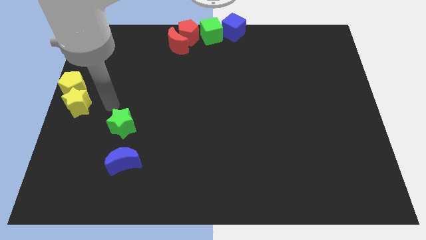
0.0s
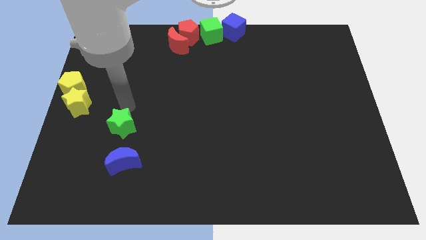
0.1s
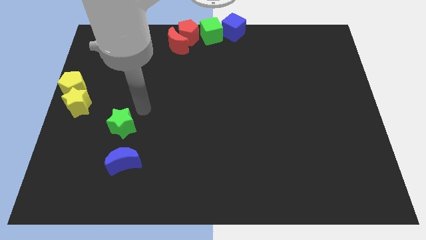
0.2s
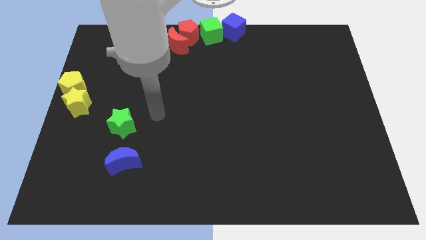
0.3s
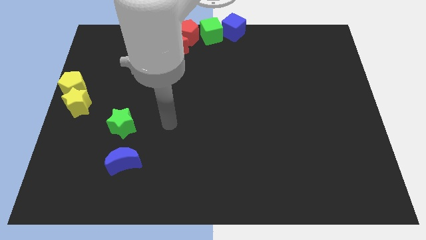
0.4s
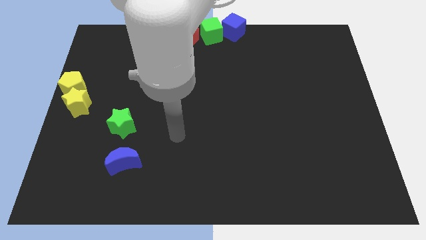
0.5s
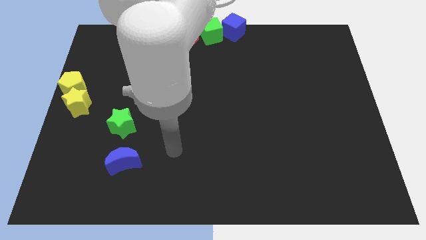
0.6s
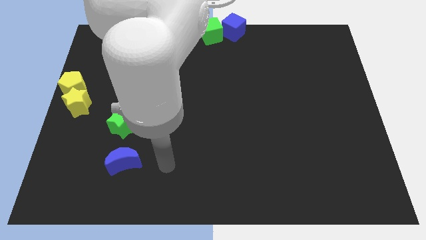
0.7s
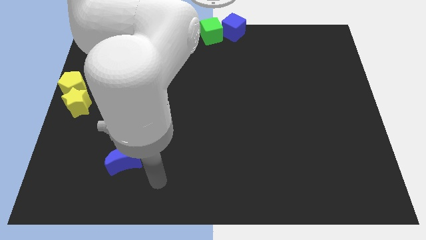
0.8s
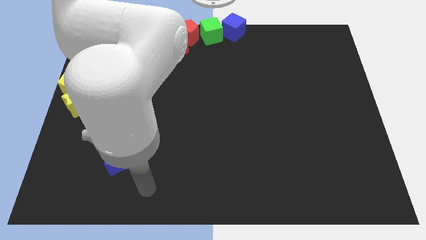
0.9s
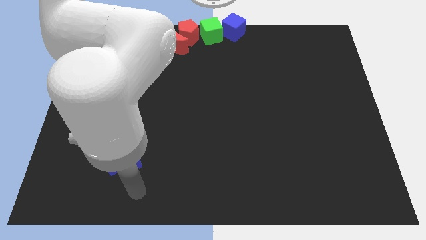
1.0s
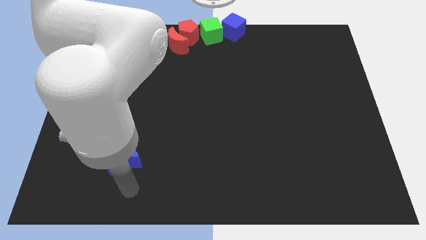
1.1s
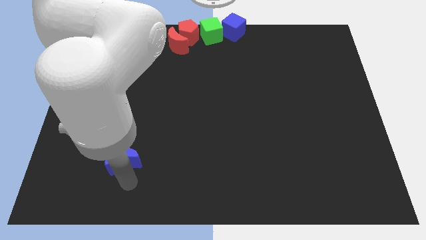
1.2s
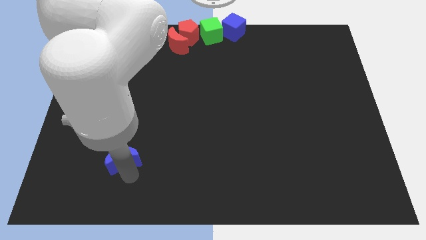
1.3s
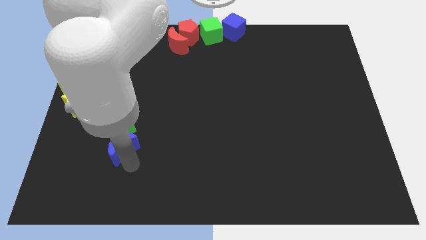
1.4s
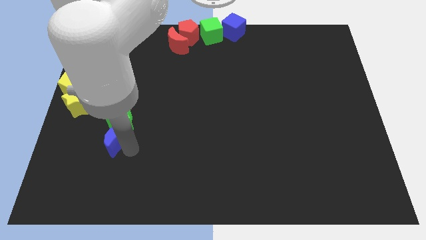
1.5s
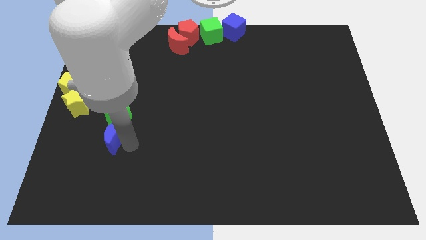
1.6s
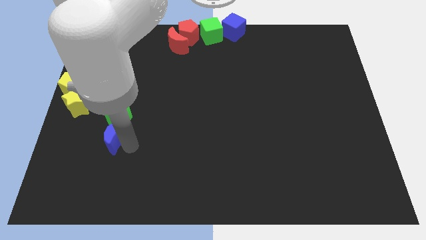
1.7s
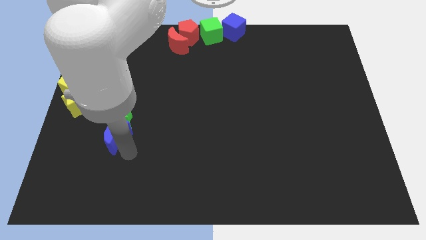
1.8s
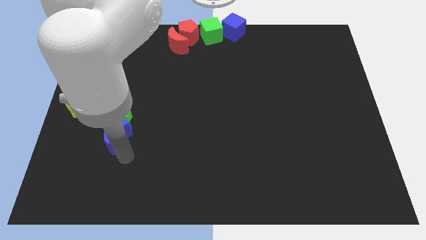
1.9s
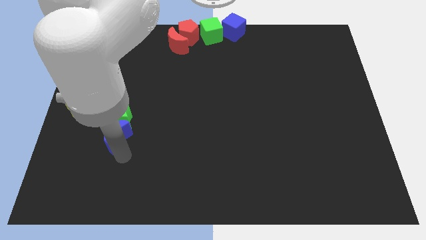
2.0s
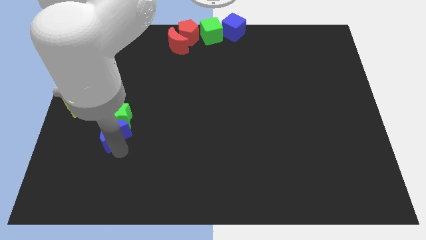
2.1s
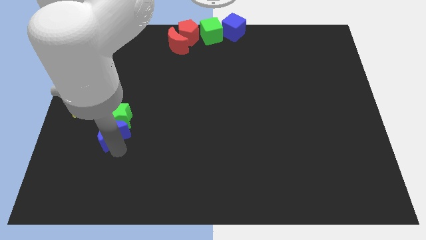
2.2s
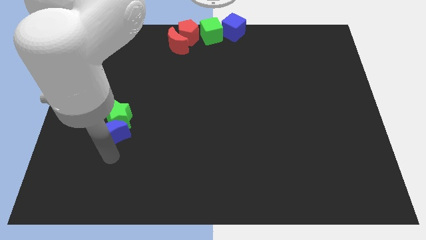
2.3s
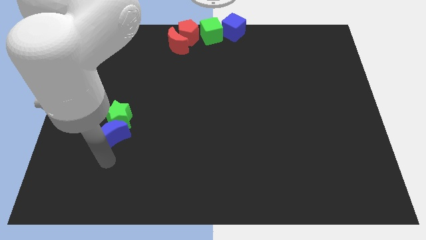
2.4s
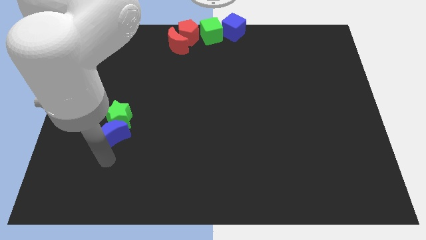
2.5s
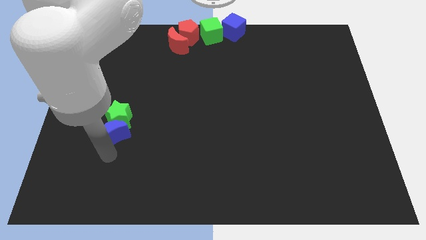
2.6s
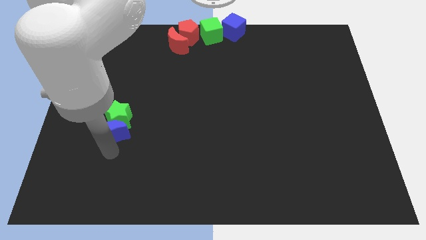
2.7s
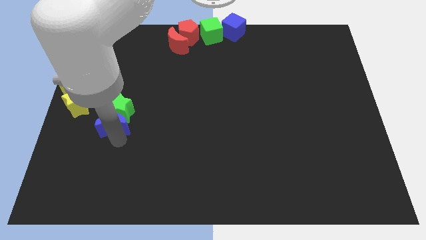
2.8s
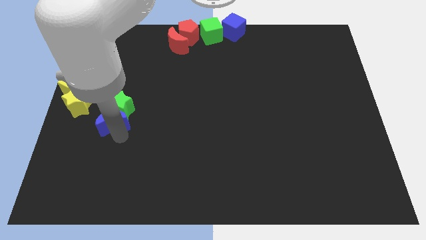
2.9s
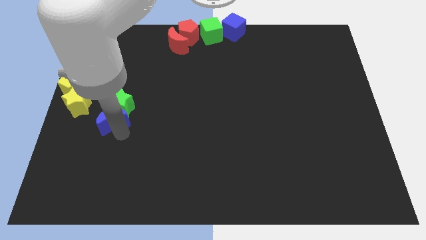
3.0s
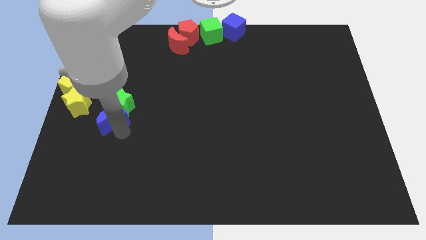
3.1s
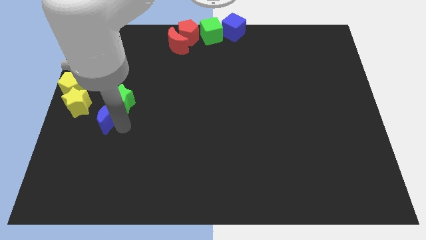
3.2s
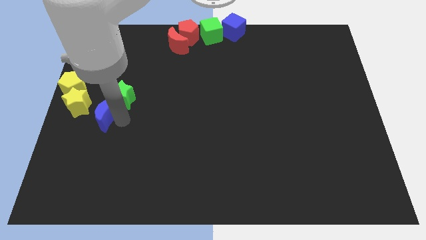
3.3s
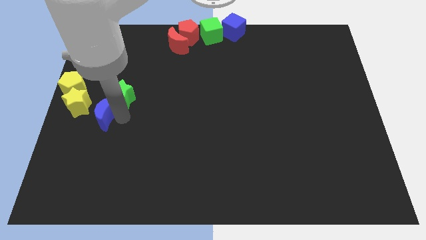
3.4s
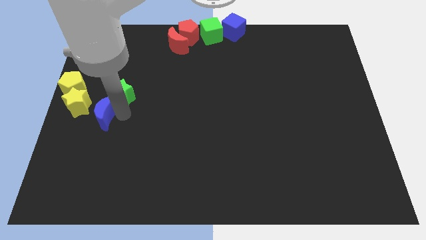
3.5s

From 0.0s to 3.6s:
move the blue crescent upwards into green star

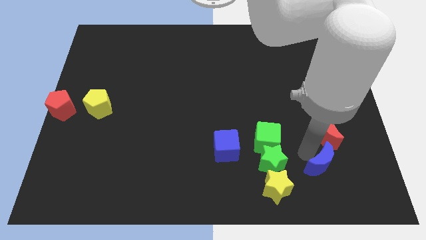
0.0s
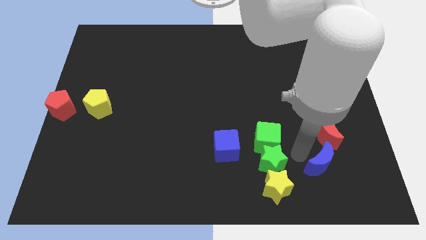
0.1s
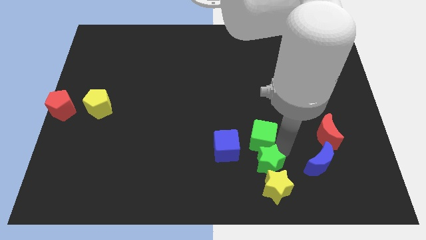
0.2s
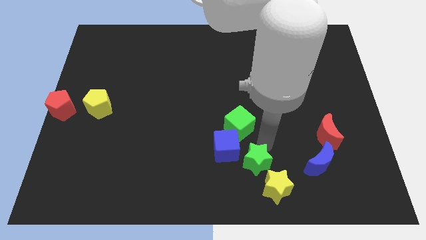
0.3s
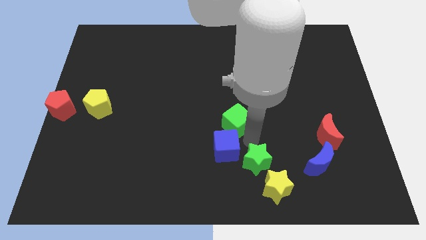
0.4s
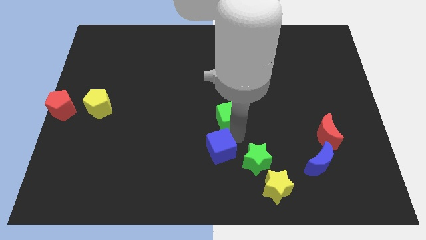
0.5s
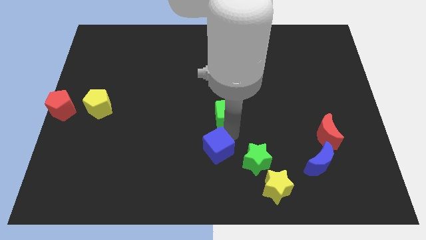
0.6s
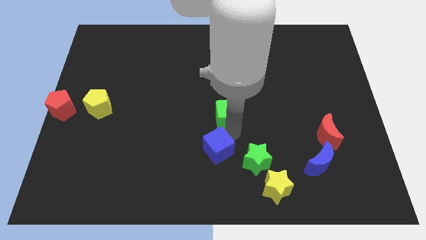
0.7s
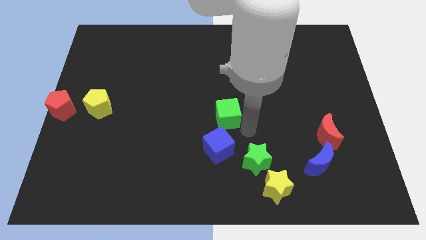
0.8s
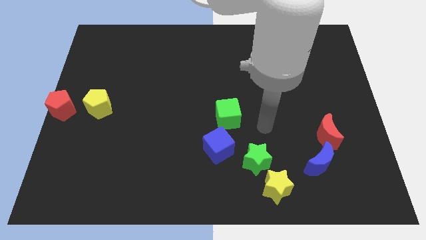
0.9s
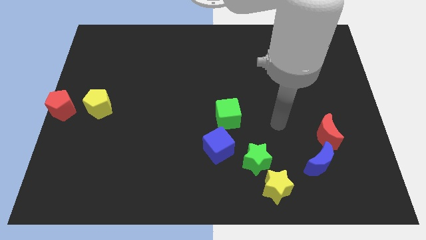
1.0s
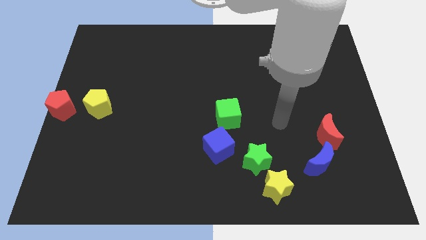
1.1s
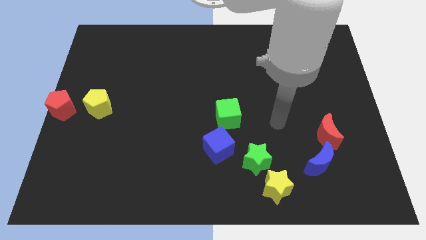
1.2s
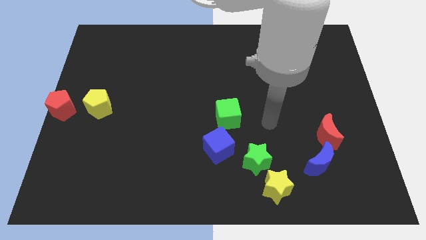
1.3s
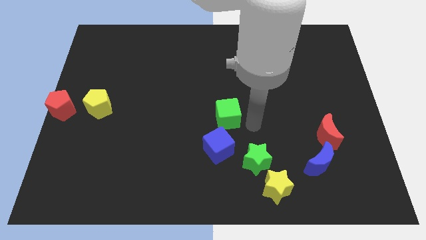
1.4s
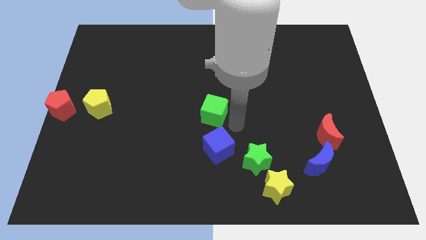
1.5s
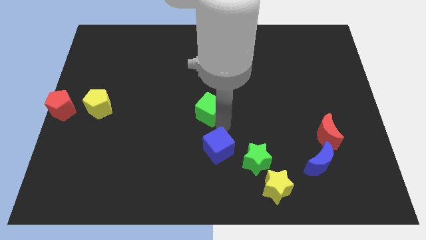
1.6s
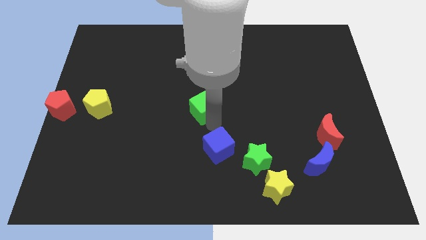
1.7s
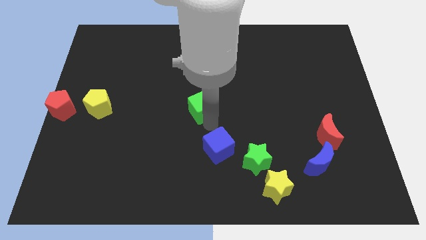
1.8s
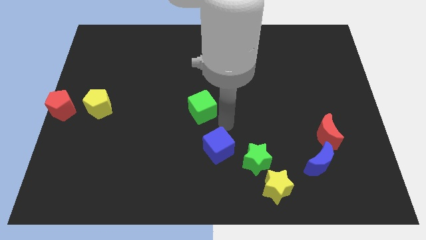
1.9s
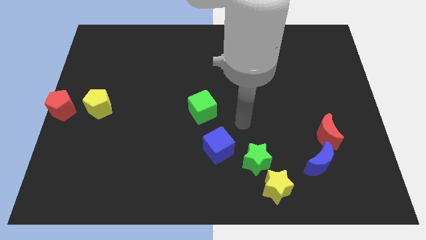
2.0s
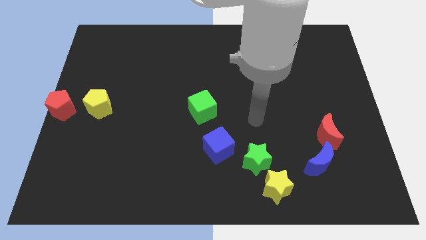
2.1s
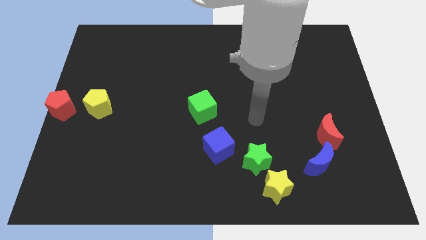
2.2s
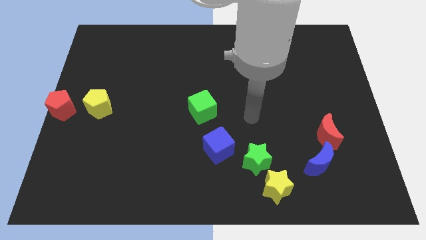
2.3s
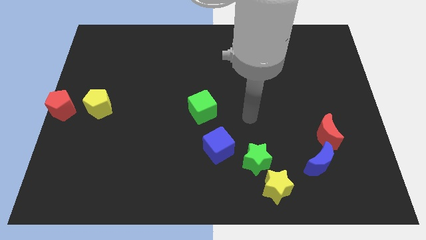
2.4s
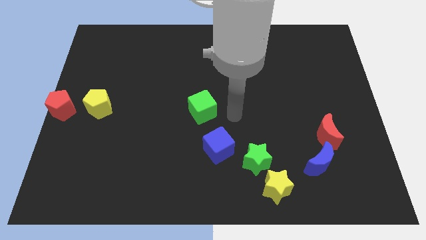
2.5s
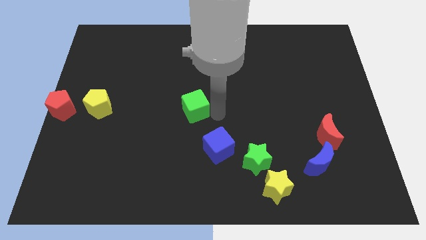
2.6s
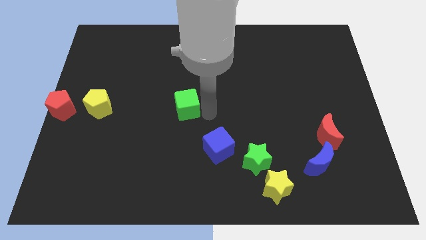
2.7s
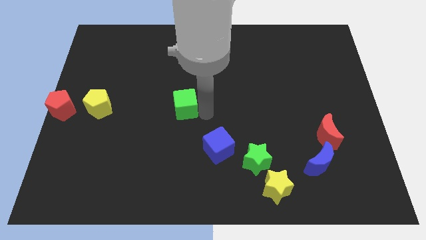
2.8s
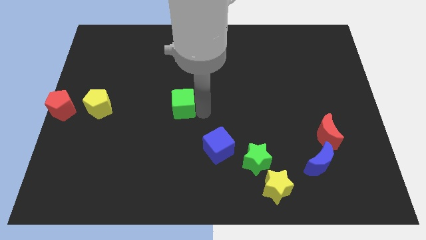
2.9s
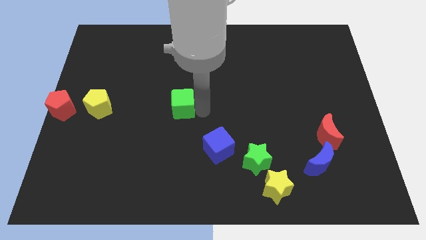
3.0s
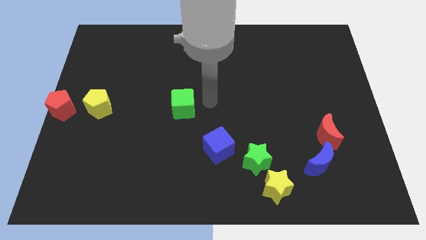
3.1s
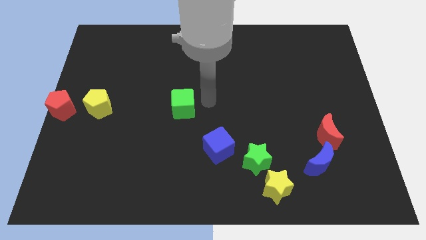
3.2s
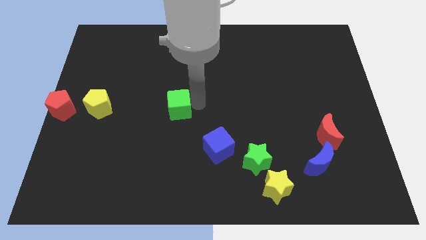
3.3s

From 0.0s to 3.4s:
drag the green cube diagonally top left to the blue cube

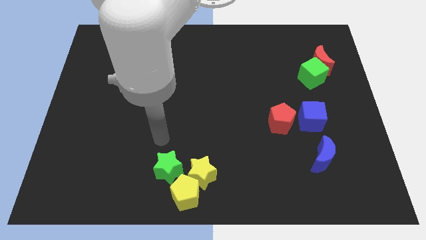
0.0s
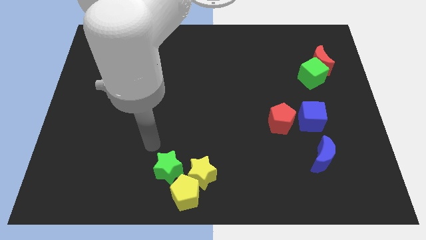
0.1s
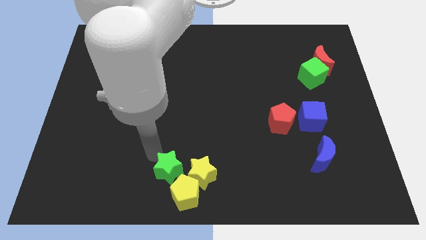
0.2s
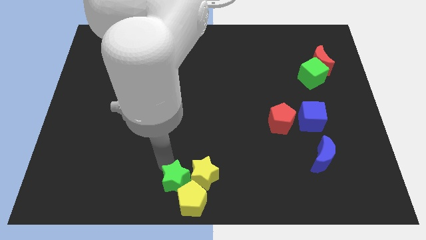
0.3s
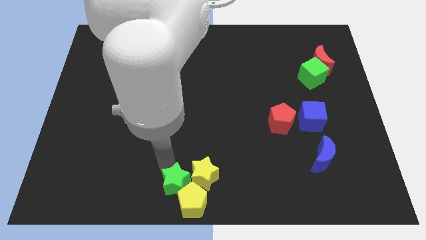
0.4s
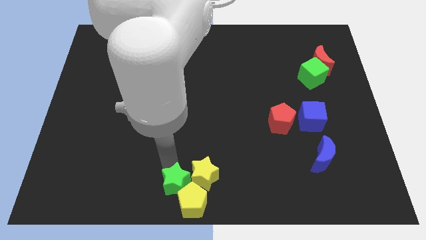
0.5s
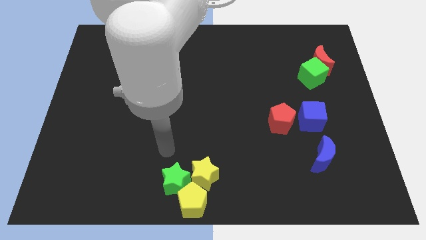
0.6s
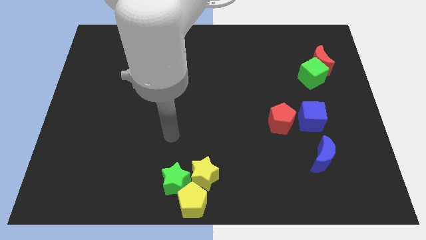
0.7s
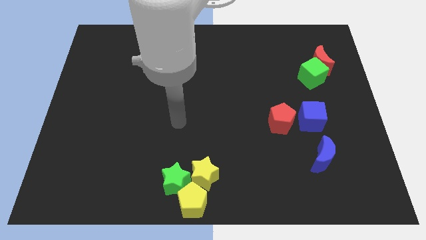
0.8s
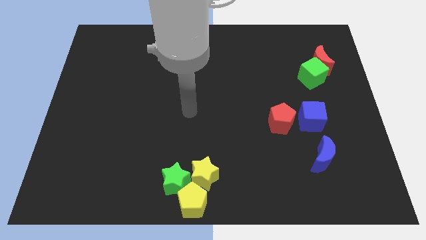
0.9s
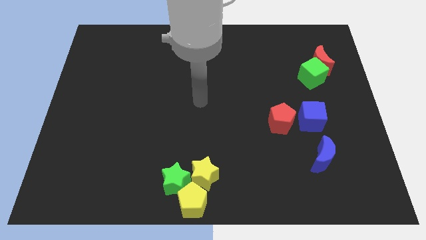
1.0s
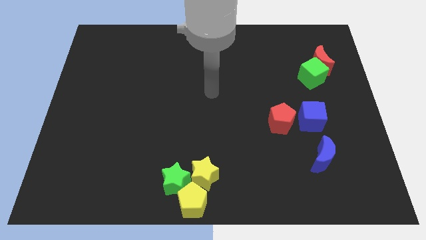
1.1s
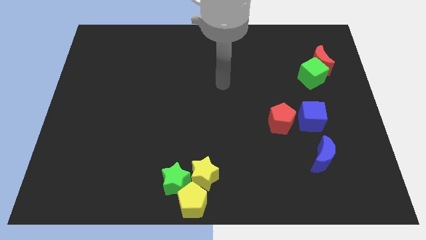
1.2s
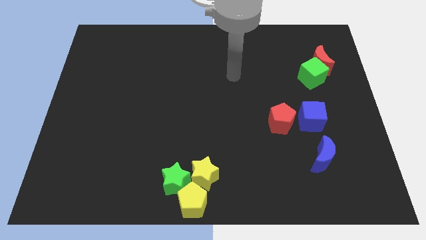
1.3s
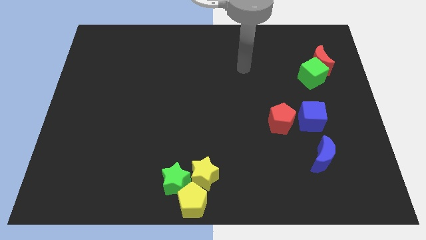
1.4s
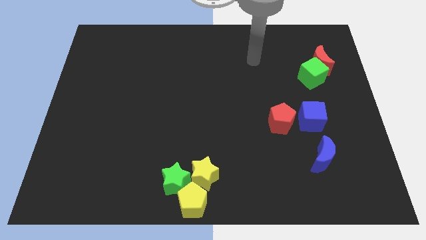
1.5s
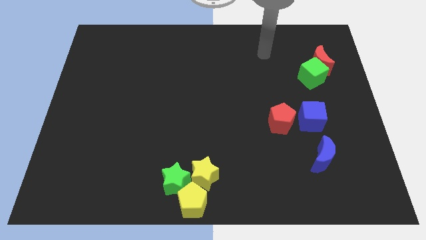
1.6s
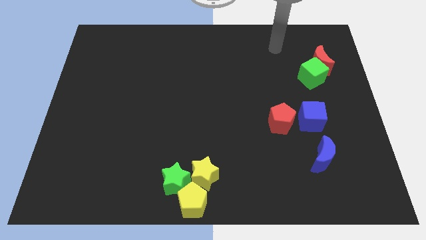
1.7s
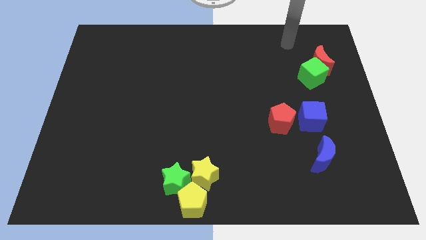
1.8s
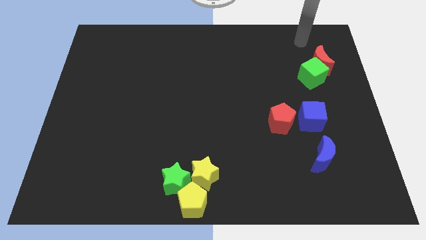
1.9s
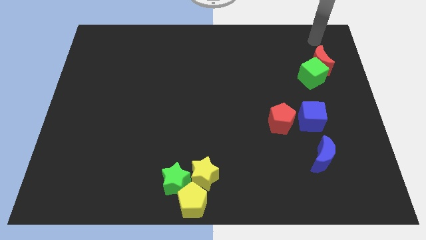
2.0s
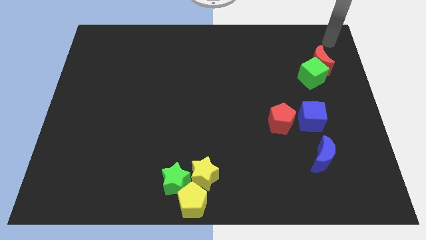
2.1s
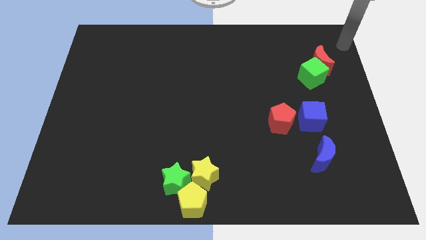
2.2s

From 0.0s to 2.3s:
move the green star into the group of yellow blocks and go away
